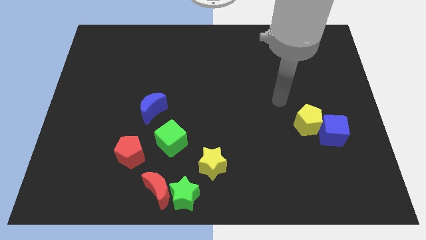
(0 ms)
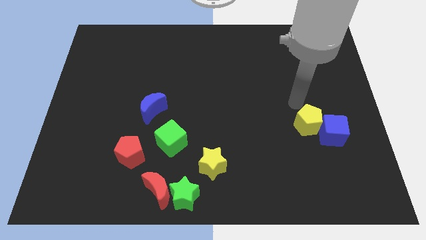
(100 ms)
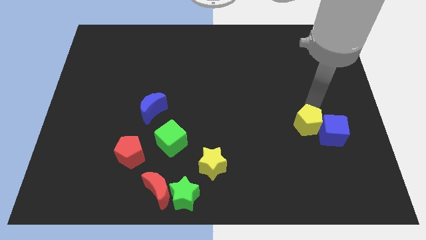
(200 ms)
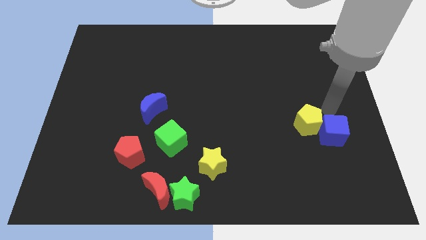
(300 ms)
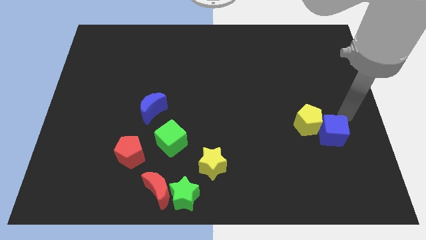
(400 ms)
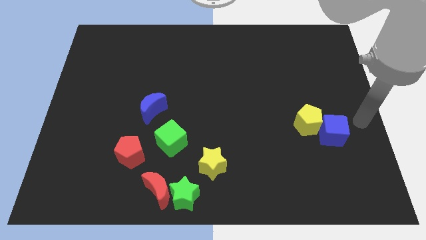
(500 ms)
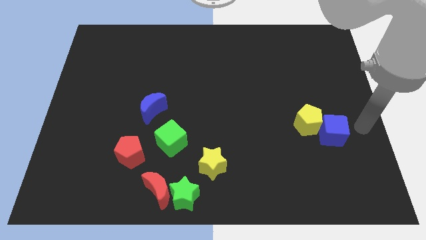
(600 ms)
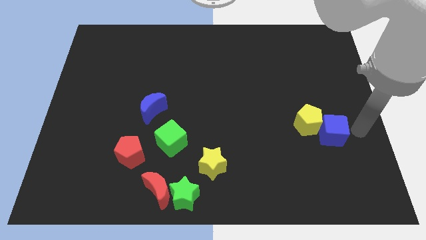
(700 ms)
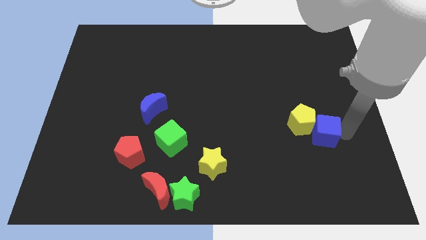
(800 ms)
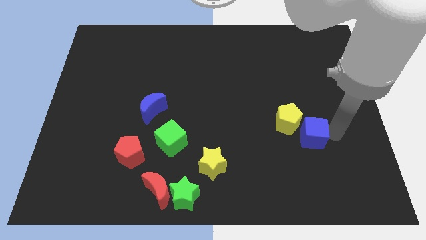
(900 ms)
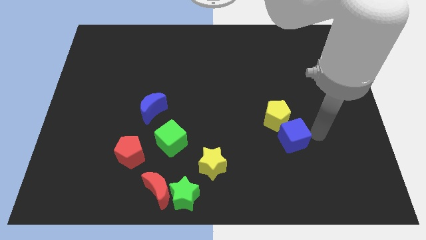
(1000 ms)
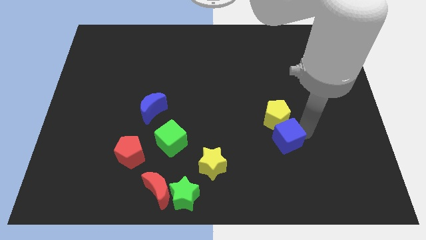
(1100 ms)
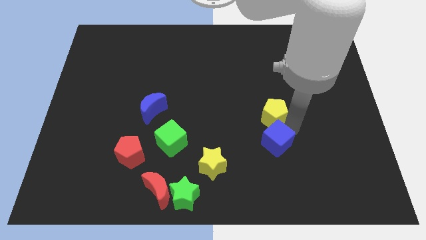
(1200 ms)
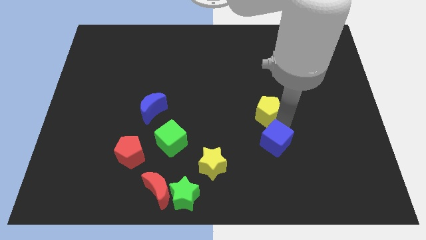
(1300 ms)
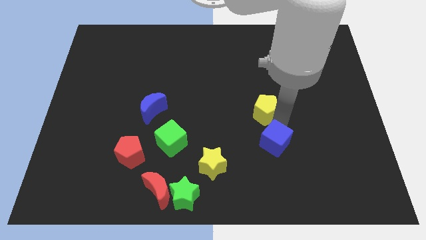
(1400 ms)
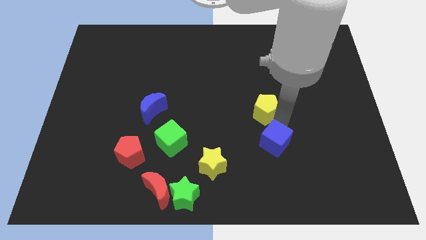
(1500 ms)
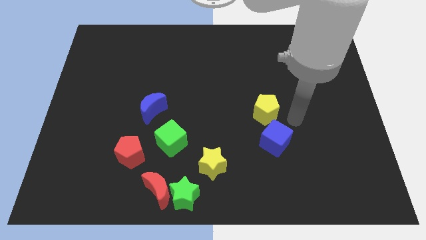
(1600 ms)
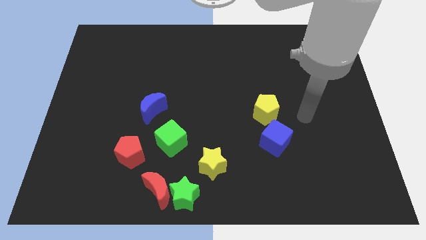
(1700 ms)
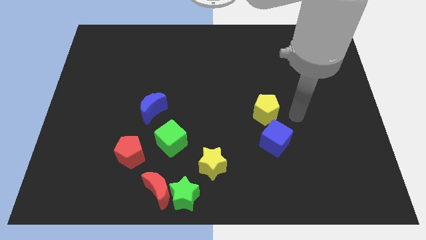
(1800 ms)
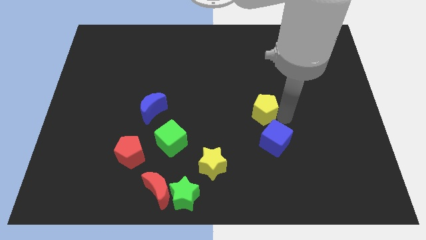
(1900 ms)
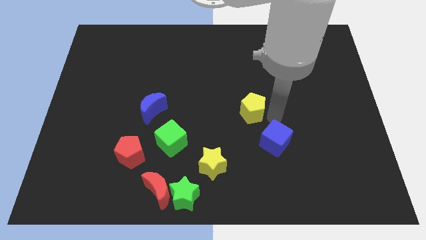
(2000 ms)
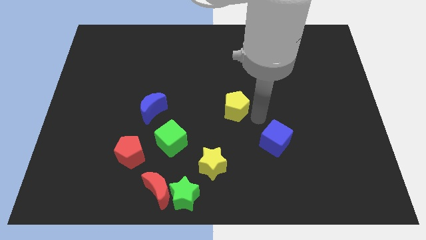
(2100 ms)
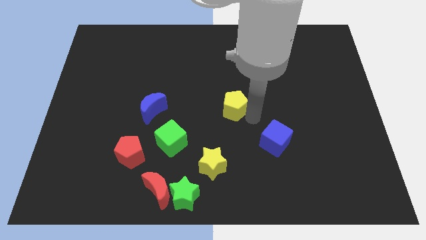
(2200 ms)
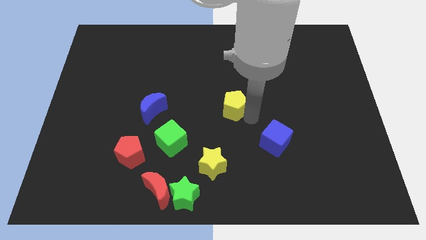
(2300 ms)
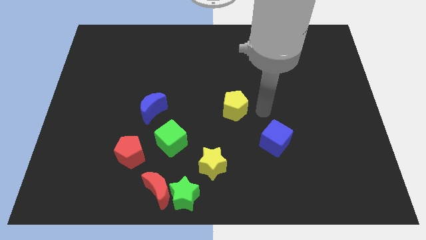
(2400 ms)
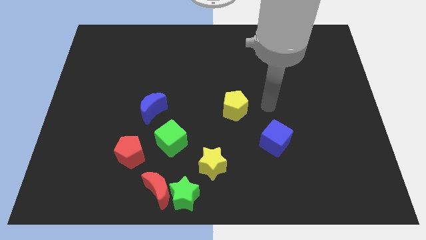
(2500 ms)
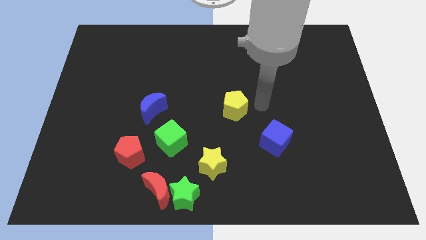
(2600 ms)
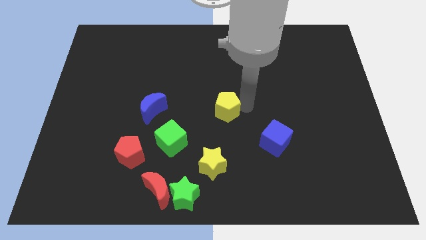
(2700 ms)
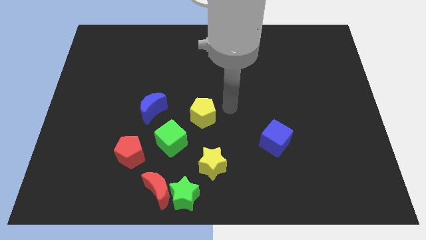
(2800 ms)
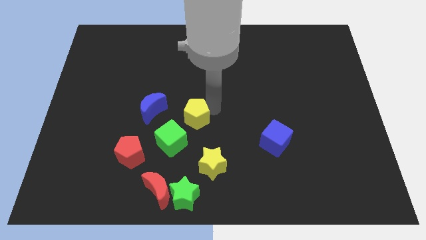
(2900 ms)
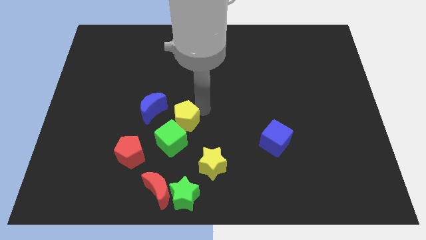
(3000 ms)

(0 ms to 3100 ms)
separate yellow pentagon from blue cube

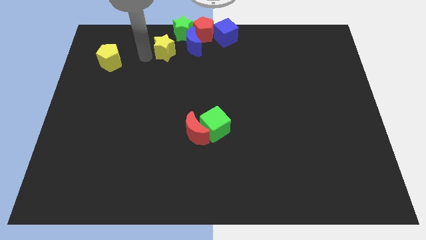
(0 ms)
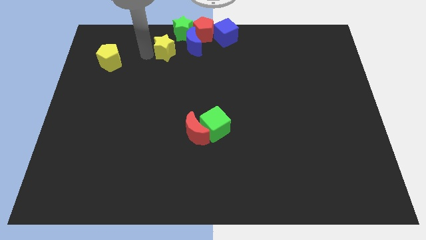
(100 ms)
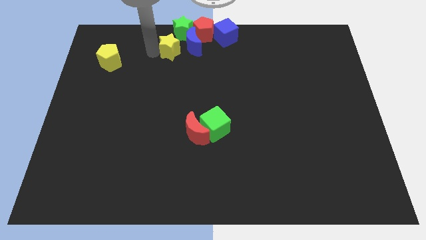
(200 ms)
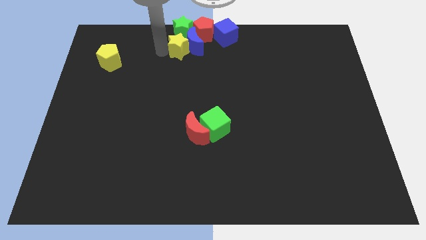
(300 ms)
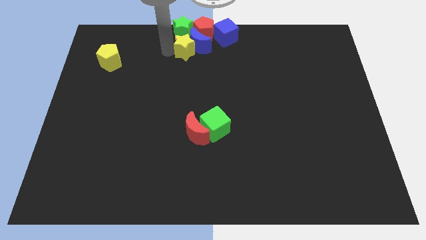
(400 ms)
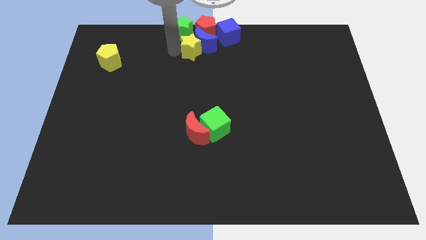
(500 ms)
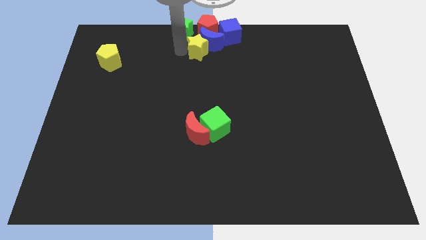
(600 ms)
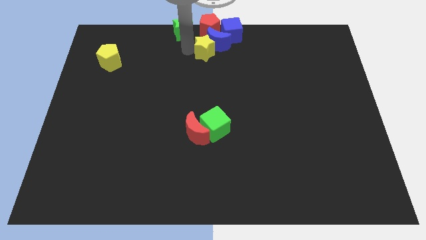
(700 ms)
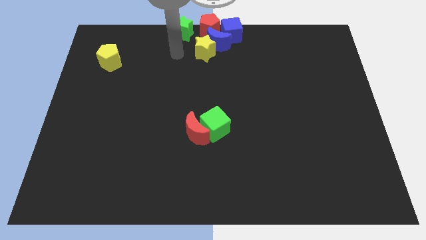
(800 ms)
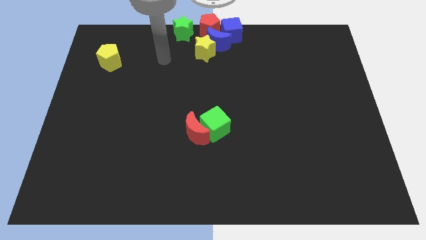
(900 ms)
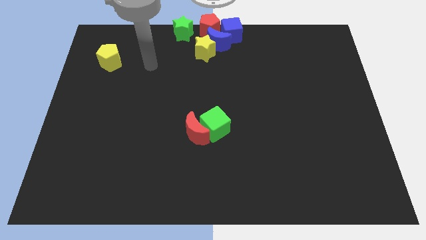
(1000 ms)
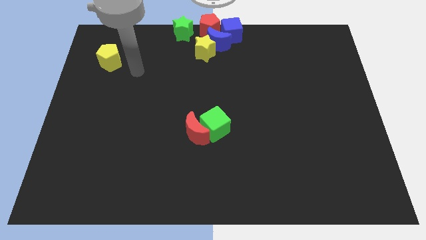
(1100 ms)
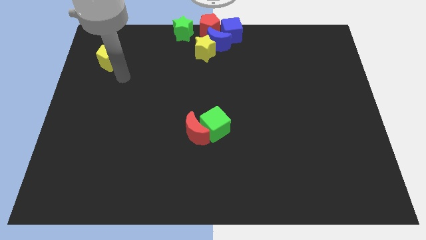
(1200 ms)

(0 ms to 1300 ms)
push the yellow star into the blue moon

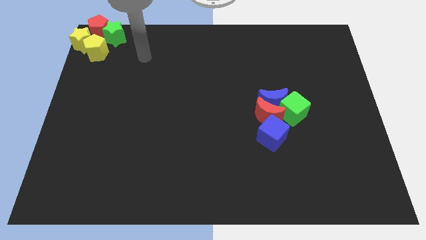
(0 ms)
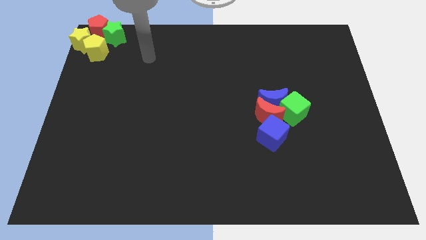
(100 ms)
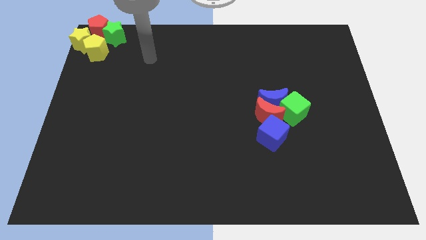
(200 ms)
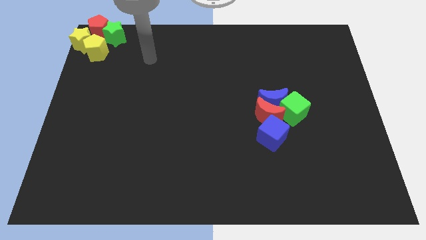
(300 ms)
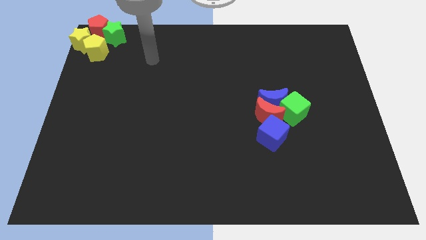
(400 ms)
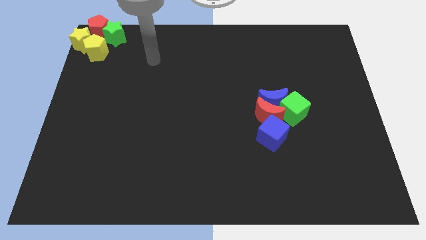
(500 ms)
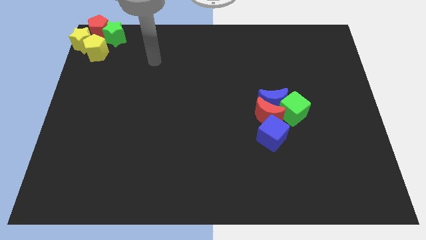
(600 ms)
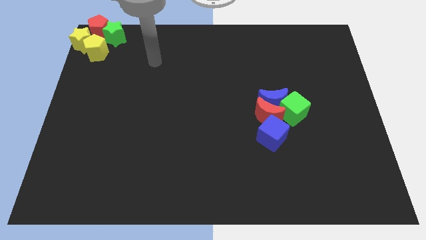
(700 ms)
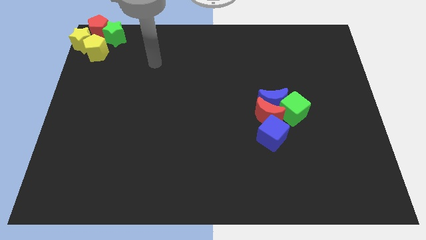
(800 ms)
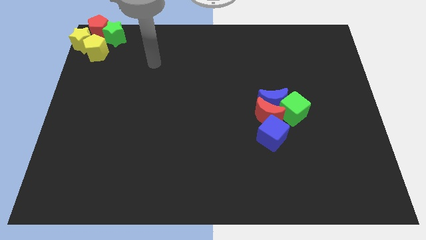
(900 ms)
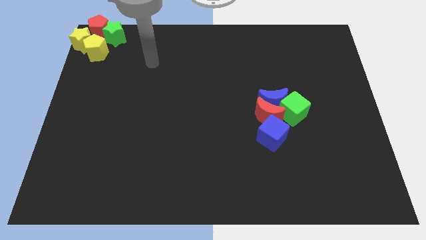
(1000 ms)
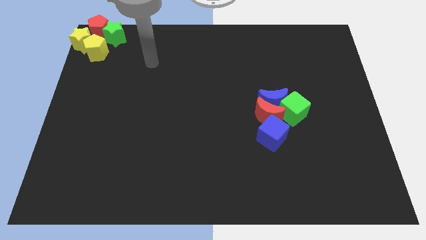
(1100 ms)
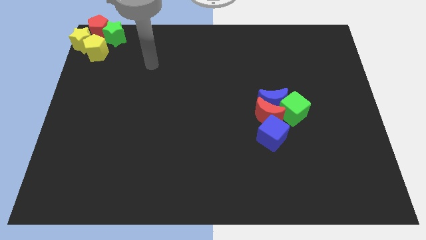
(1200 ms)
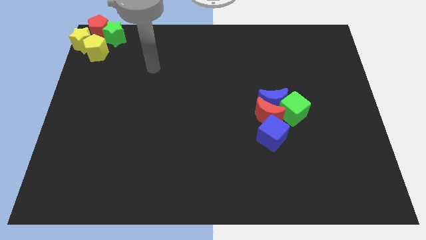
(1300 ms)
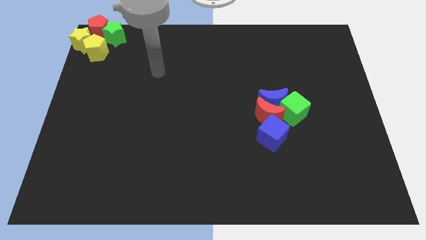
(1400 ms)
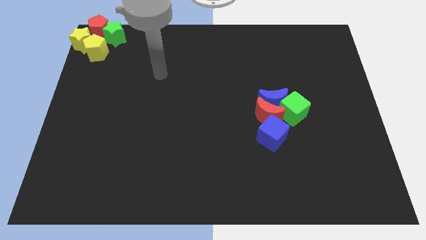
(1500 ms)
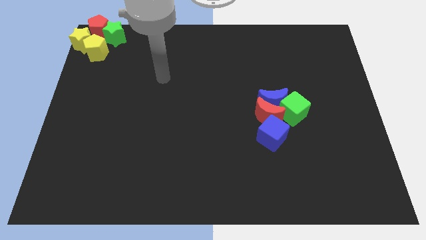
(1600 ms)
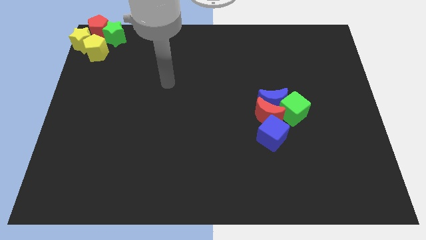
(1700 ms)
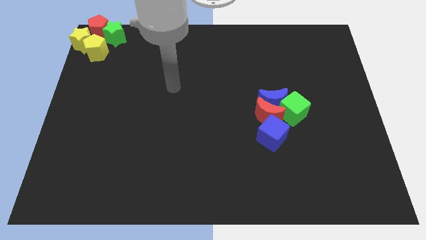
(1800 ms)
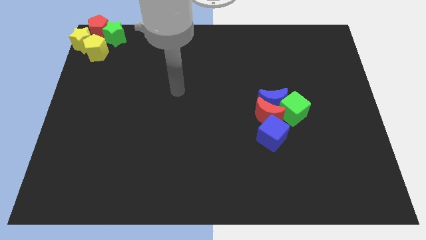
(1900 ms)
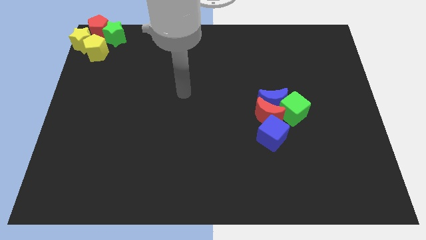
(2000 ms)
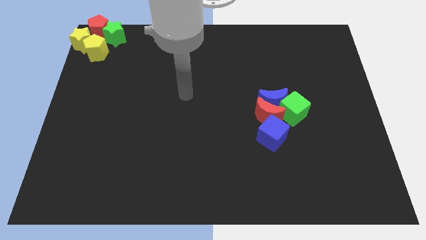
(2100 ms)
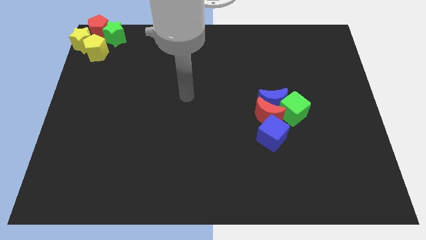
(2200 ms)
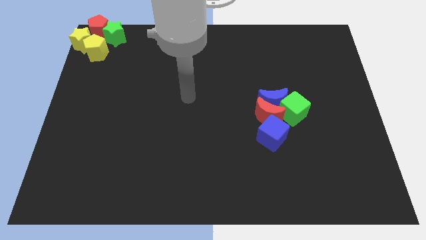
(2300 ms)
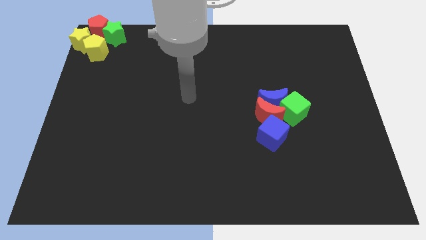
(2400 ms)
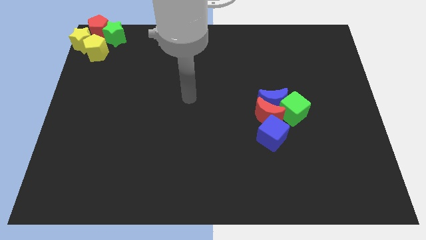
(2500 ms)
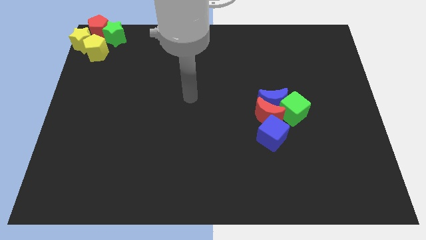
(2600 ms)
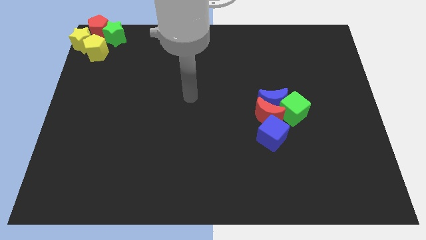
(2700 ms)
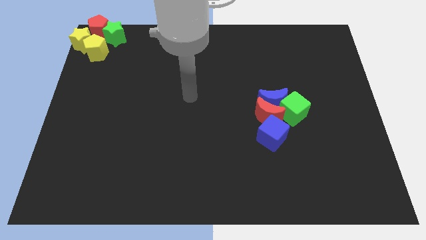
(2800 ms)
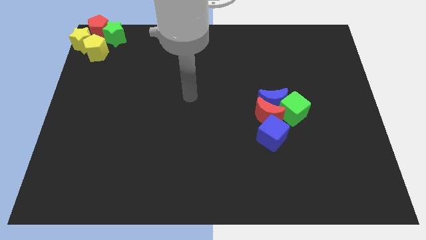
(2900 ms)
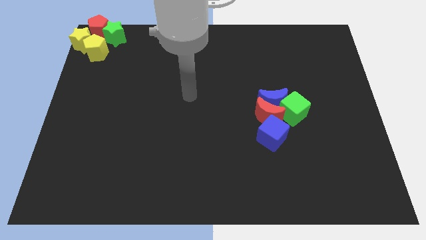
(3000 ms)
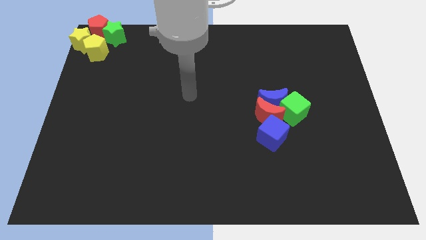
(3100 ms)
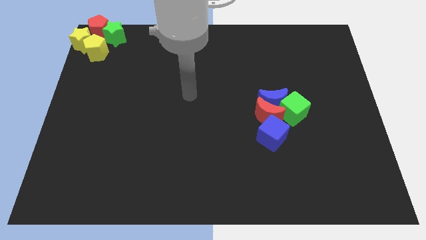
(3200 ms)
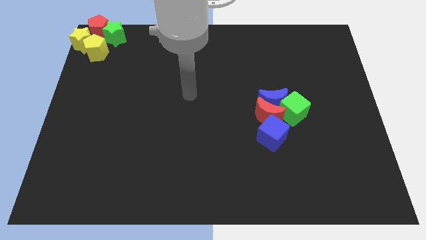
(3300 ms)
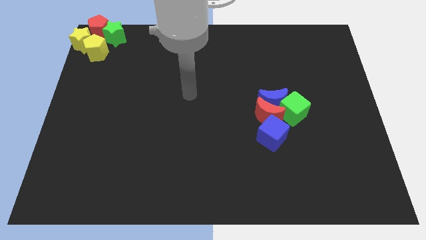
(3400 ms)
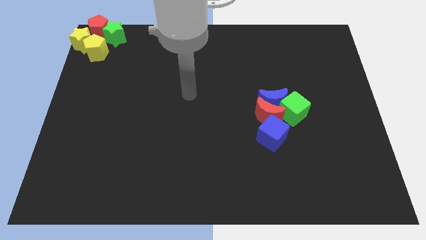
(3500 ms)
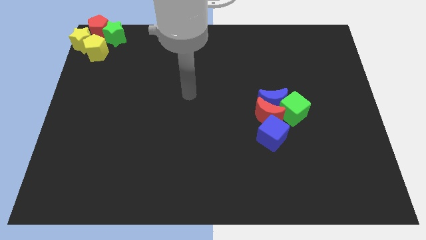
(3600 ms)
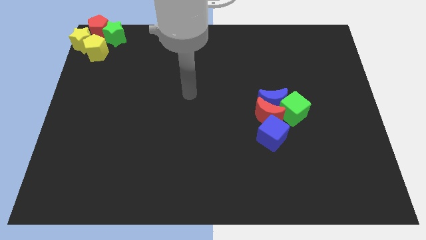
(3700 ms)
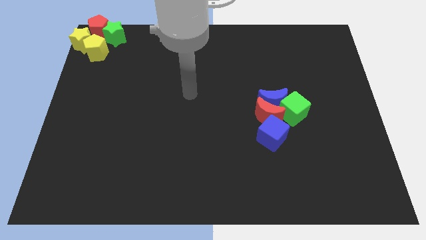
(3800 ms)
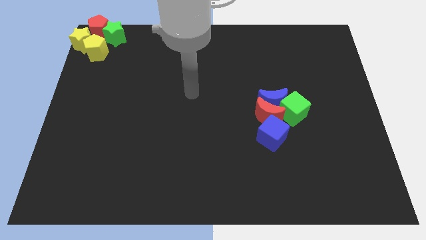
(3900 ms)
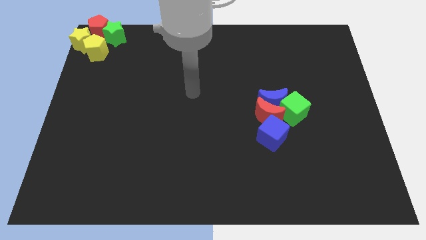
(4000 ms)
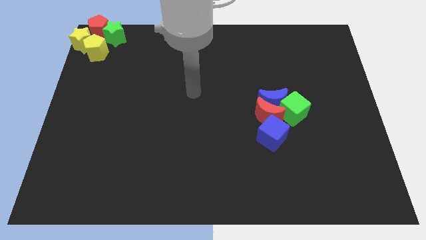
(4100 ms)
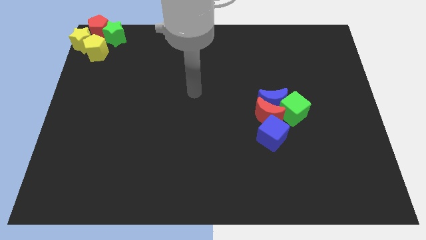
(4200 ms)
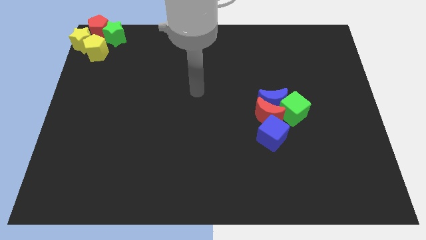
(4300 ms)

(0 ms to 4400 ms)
move your arm towards the center of the board

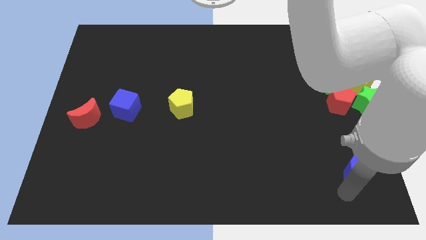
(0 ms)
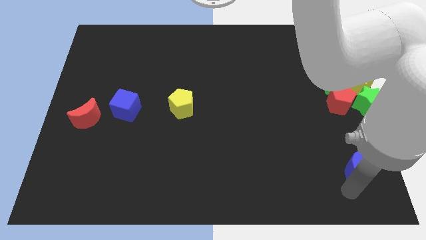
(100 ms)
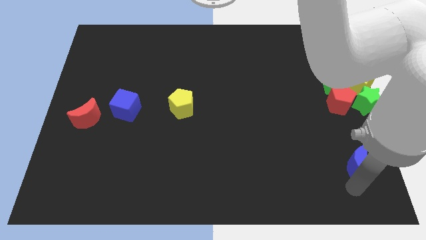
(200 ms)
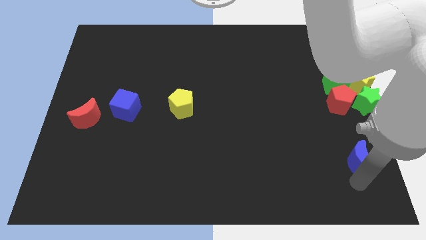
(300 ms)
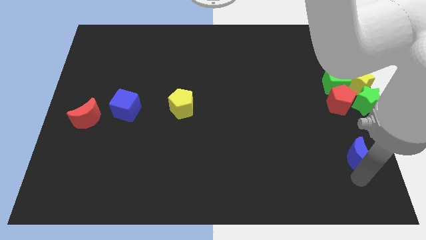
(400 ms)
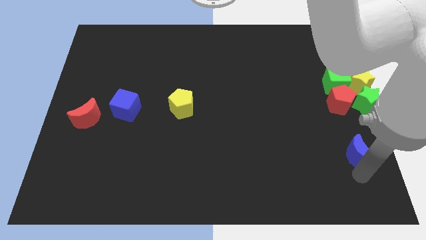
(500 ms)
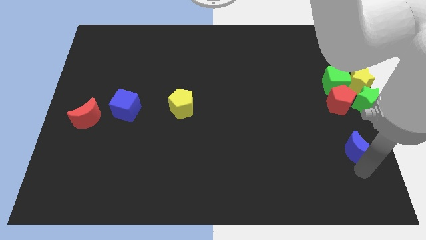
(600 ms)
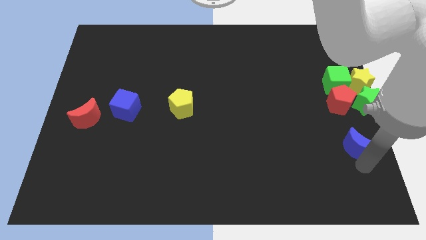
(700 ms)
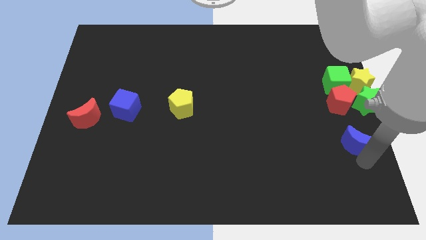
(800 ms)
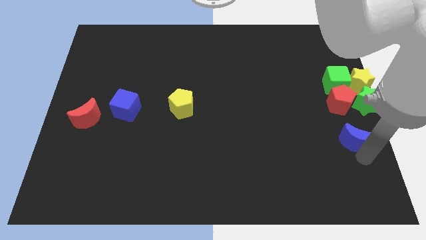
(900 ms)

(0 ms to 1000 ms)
move the blue crescent to the top of the board
